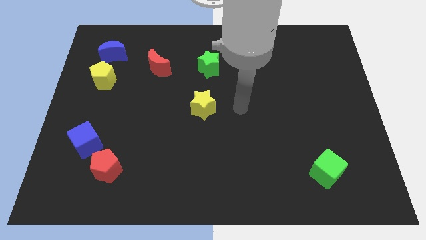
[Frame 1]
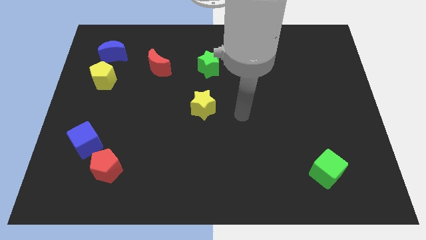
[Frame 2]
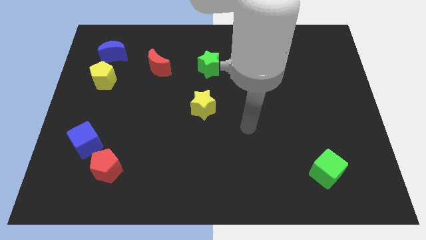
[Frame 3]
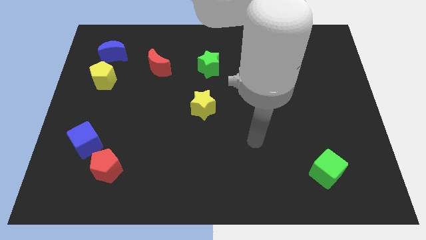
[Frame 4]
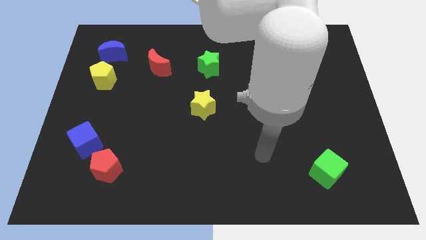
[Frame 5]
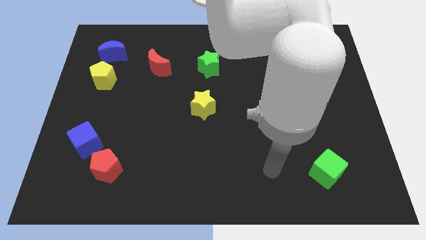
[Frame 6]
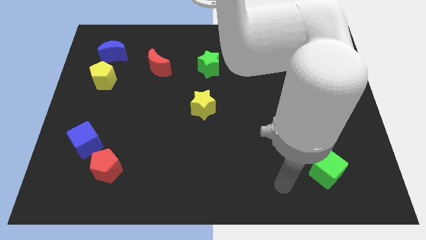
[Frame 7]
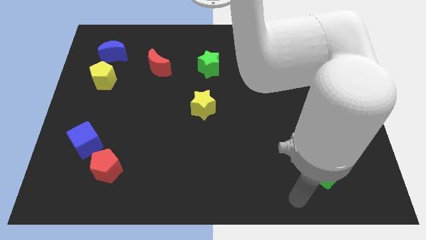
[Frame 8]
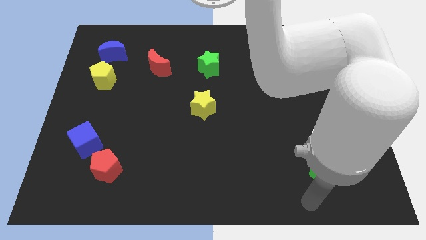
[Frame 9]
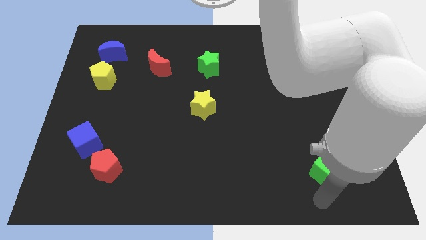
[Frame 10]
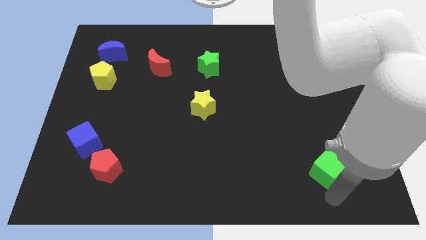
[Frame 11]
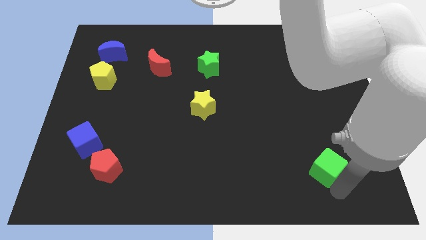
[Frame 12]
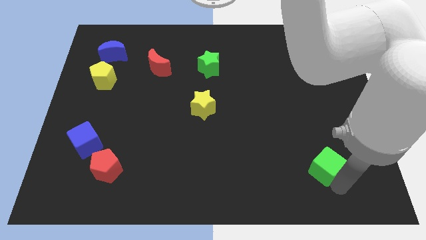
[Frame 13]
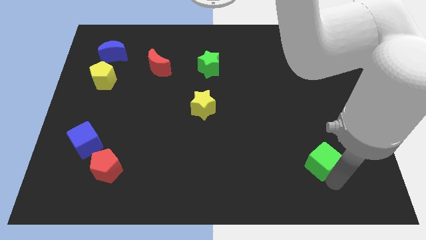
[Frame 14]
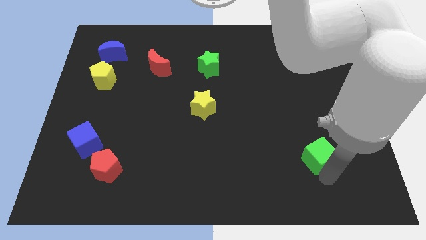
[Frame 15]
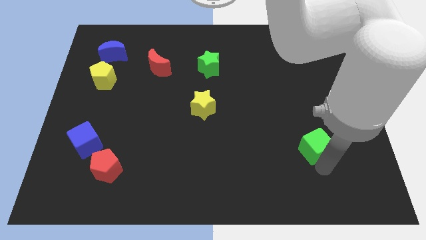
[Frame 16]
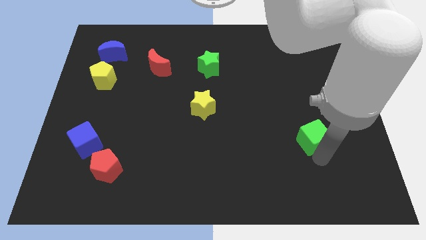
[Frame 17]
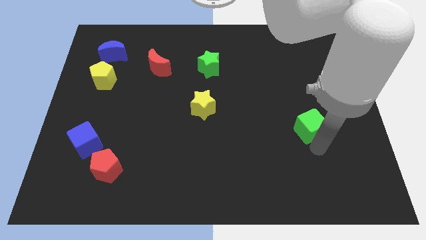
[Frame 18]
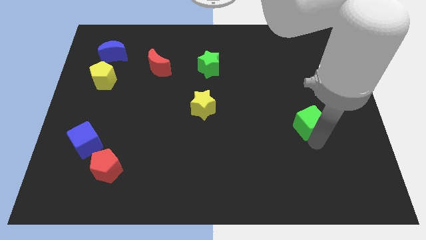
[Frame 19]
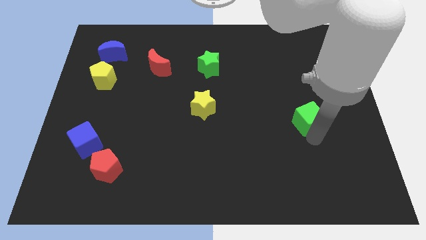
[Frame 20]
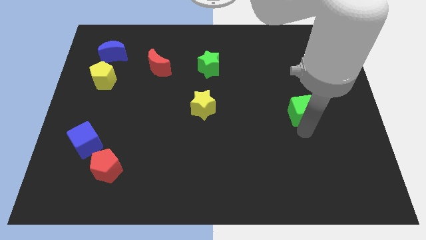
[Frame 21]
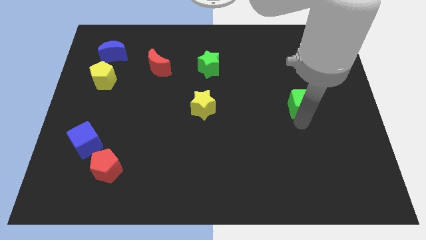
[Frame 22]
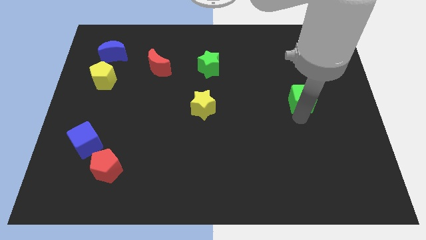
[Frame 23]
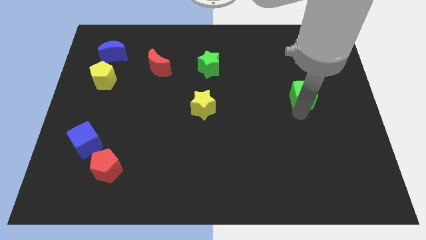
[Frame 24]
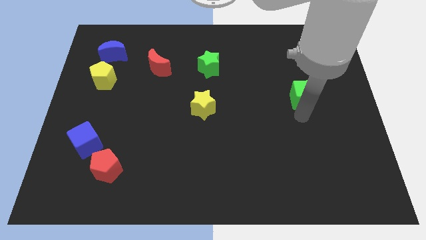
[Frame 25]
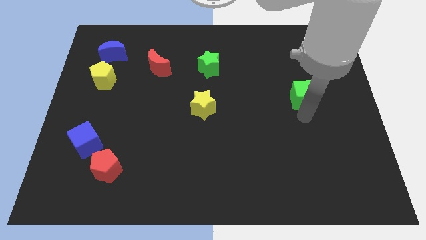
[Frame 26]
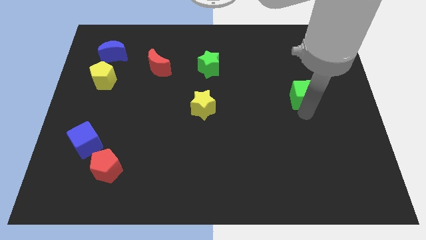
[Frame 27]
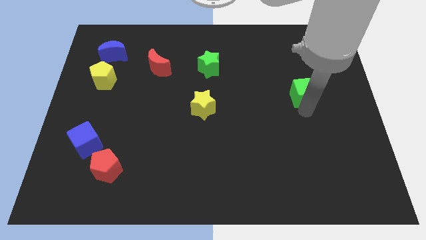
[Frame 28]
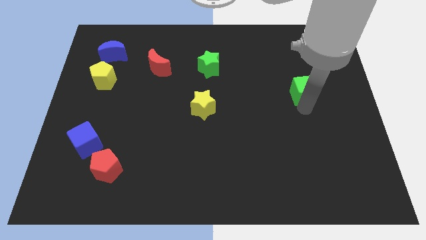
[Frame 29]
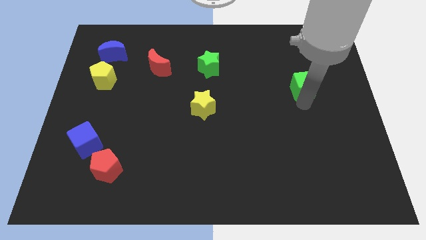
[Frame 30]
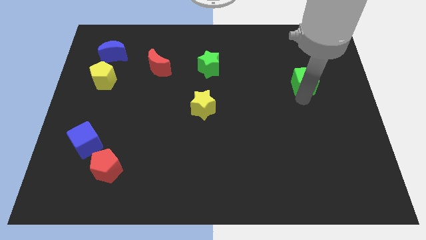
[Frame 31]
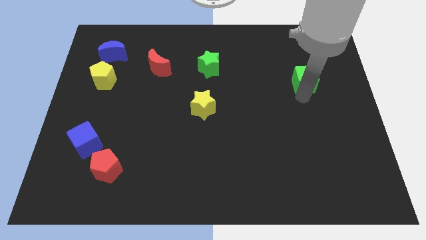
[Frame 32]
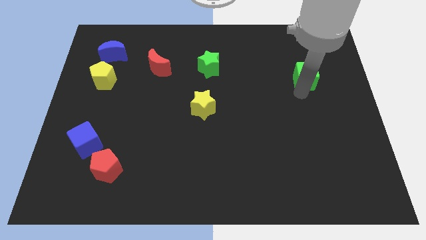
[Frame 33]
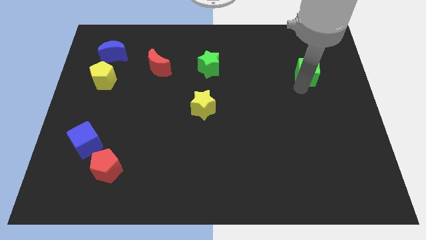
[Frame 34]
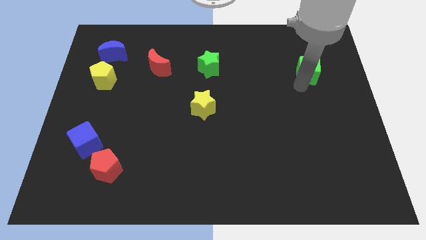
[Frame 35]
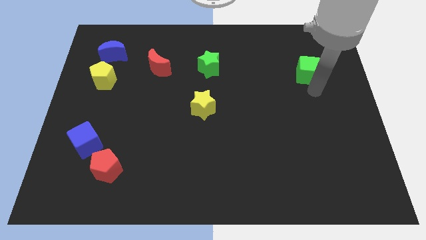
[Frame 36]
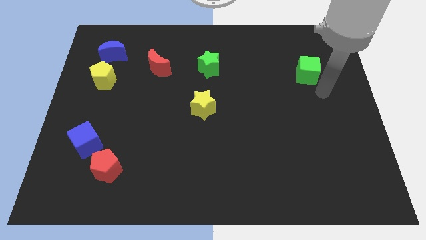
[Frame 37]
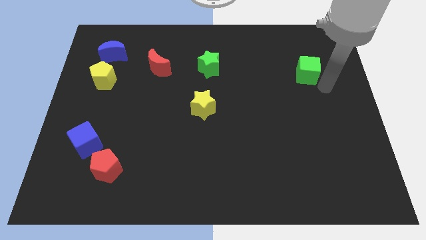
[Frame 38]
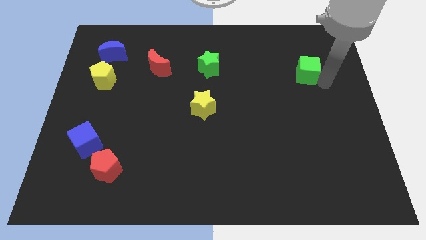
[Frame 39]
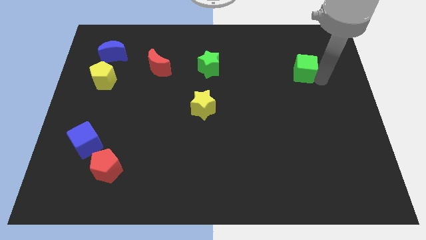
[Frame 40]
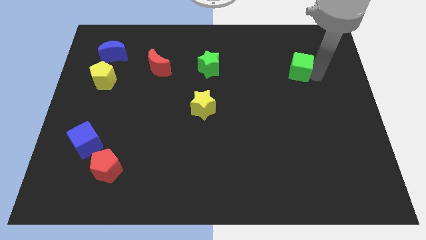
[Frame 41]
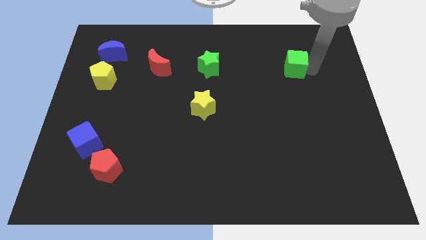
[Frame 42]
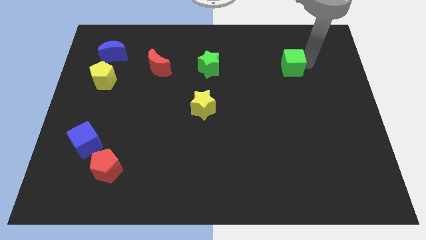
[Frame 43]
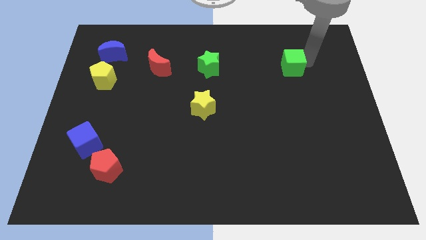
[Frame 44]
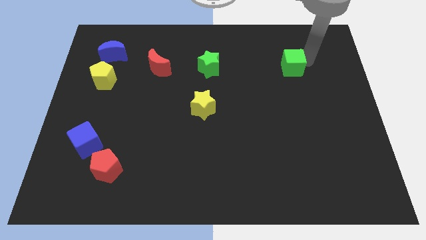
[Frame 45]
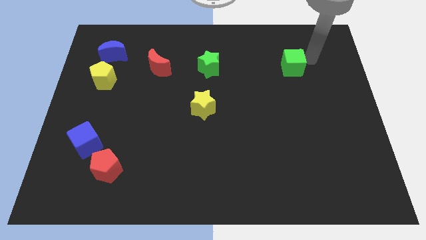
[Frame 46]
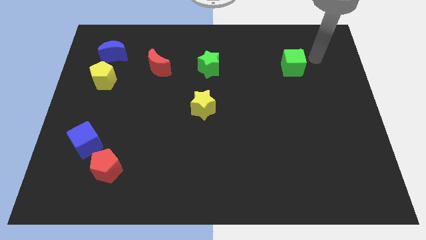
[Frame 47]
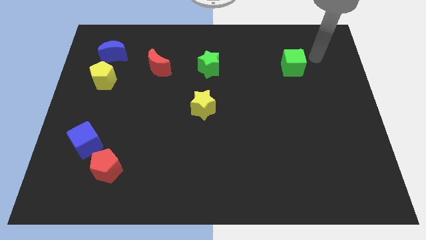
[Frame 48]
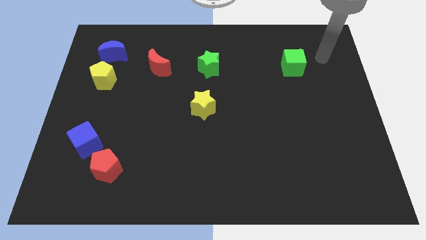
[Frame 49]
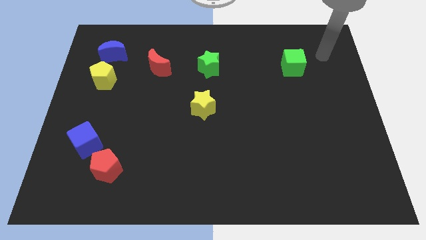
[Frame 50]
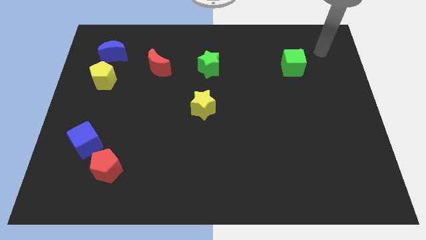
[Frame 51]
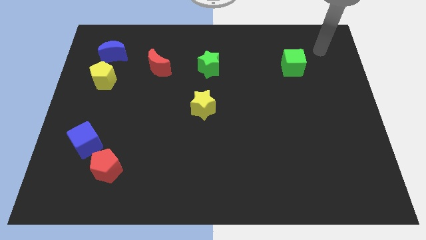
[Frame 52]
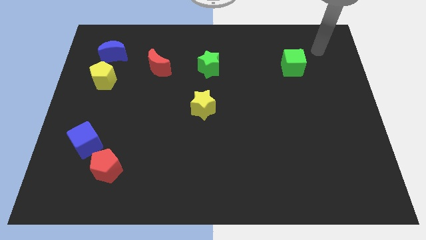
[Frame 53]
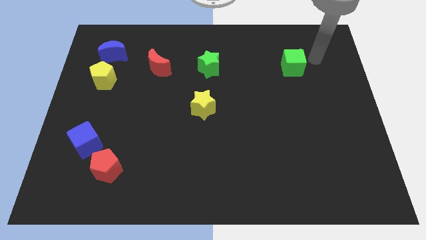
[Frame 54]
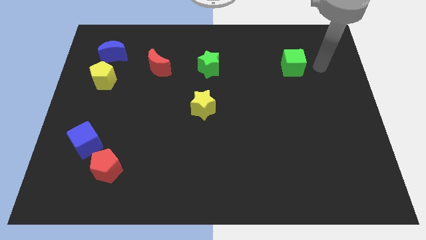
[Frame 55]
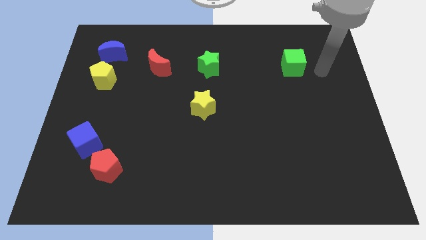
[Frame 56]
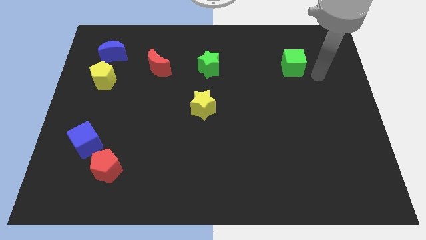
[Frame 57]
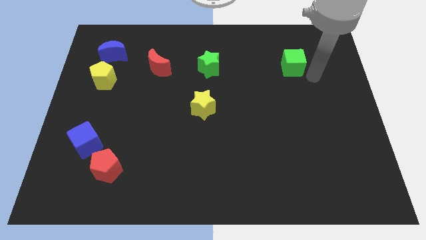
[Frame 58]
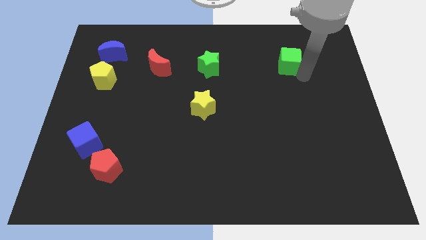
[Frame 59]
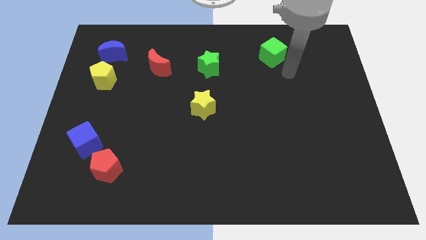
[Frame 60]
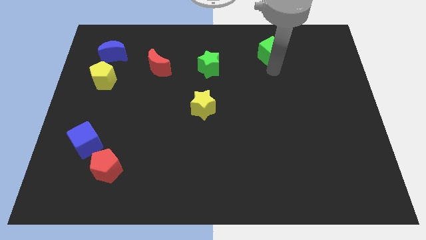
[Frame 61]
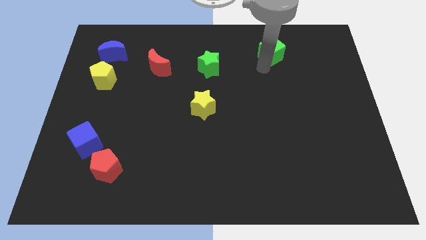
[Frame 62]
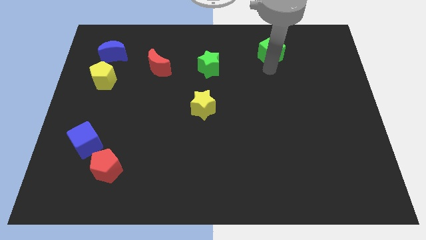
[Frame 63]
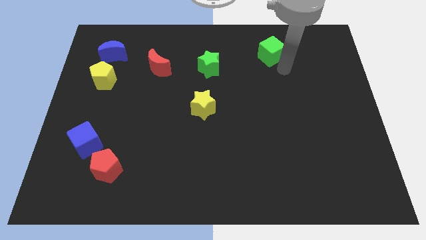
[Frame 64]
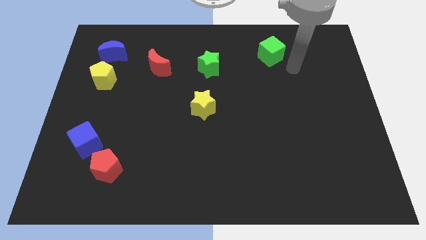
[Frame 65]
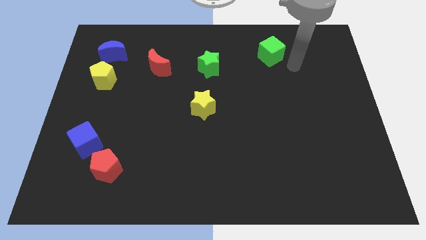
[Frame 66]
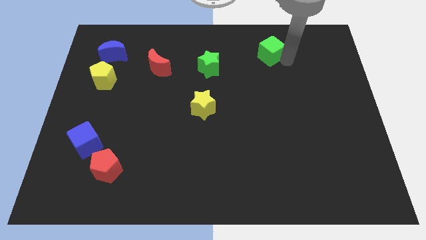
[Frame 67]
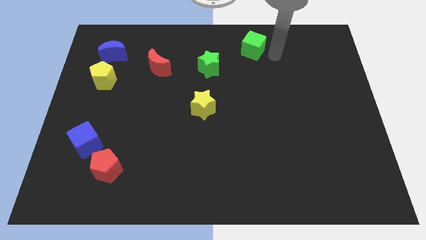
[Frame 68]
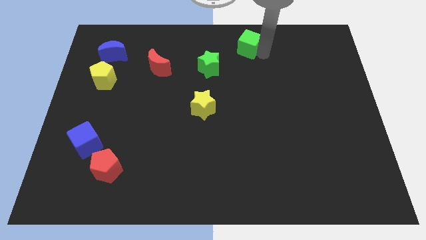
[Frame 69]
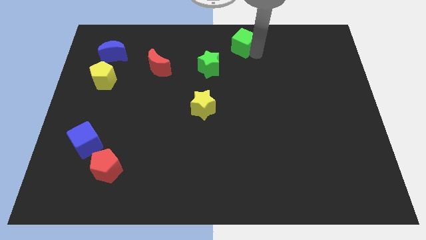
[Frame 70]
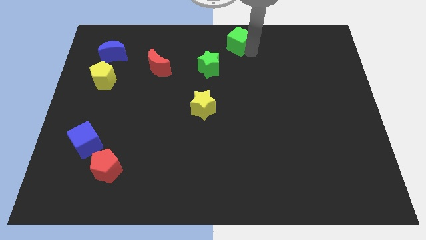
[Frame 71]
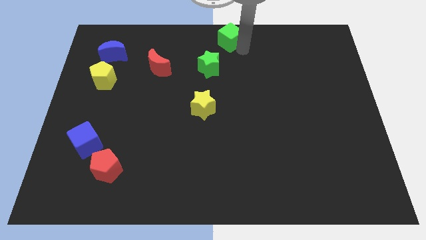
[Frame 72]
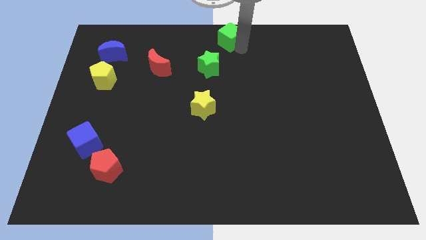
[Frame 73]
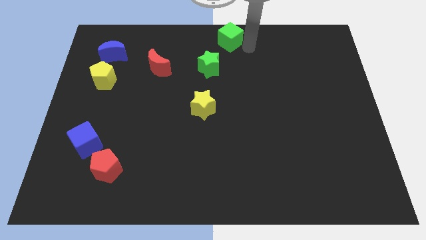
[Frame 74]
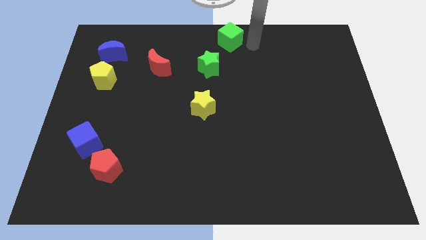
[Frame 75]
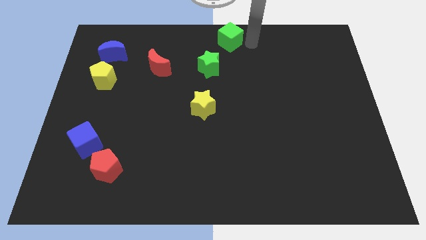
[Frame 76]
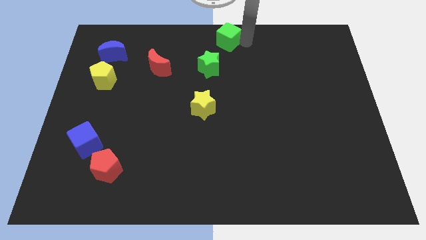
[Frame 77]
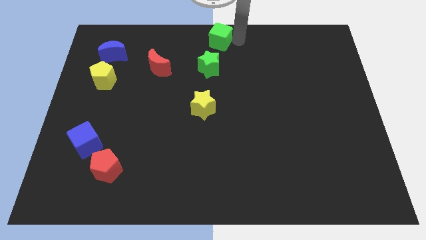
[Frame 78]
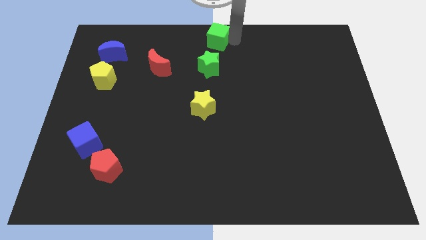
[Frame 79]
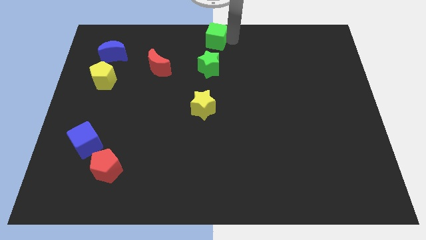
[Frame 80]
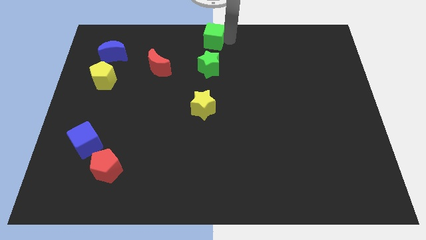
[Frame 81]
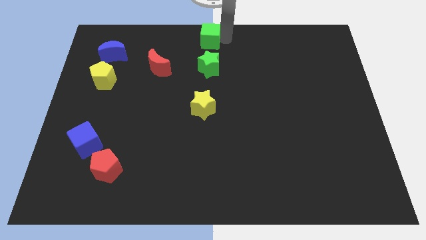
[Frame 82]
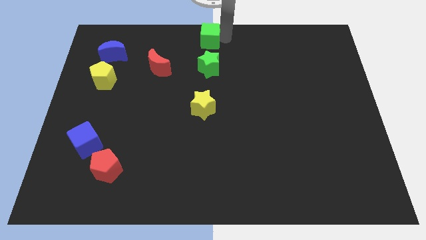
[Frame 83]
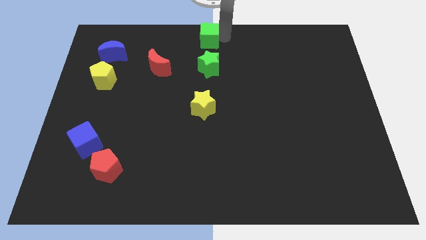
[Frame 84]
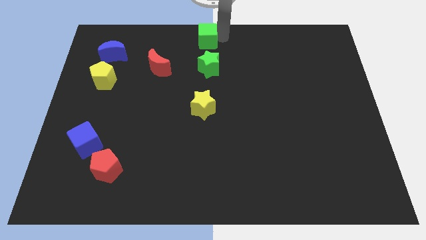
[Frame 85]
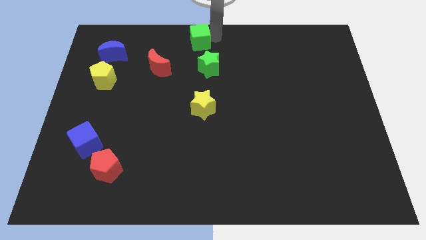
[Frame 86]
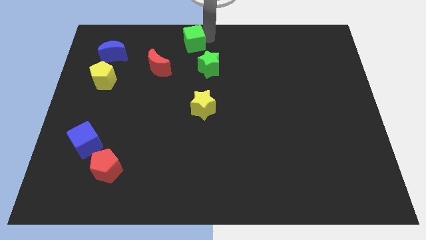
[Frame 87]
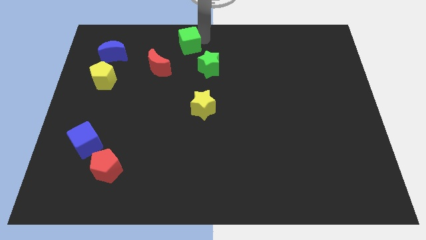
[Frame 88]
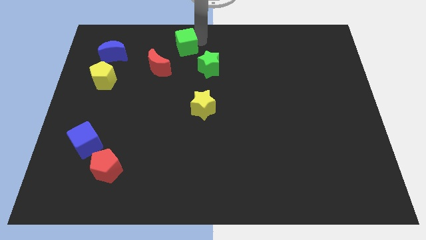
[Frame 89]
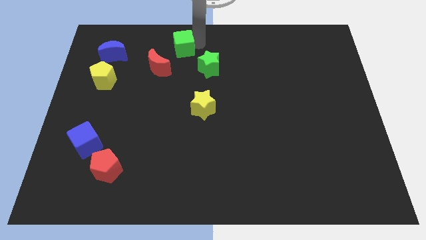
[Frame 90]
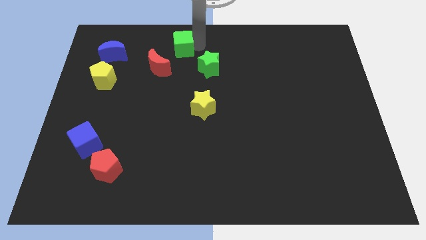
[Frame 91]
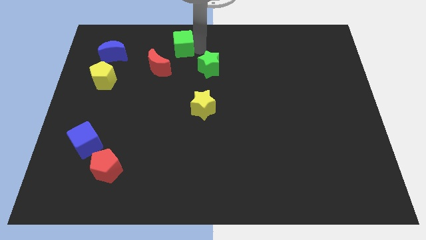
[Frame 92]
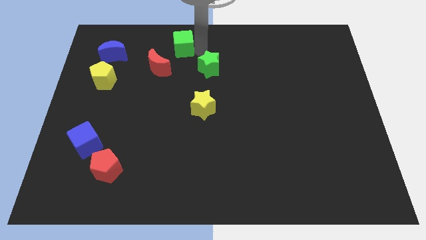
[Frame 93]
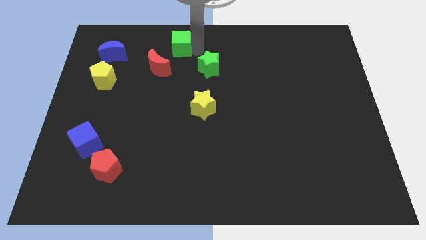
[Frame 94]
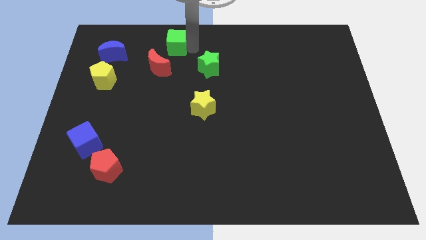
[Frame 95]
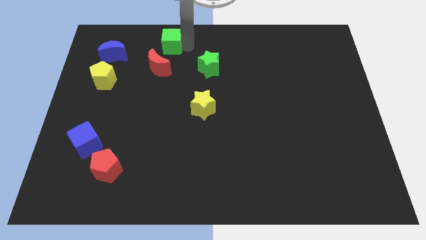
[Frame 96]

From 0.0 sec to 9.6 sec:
place the green cube above the red moon
